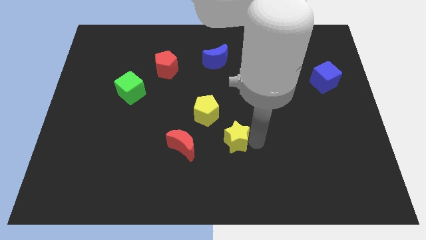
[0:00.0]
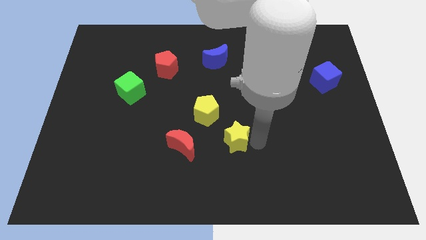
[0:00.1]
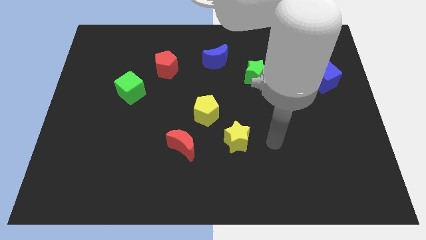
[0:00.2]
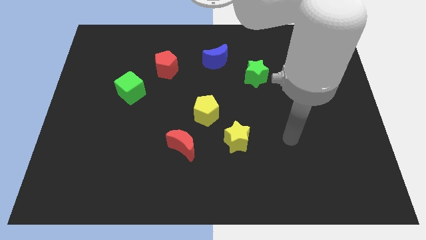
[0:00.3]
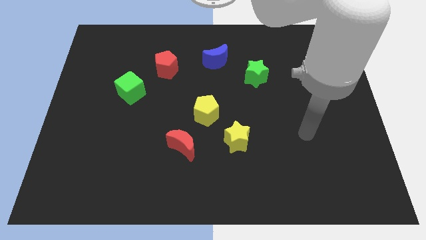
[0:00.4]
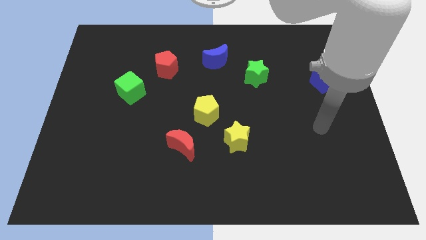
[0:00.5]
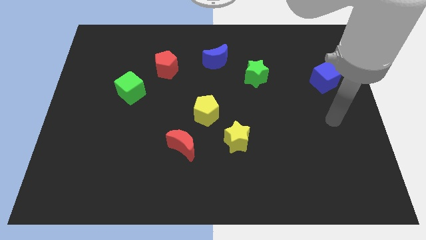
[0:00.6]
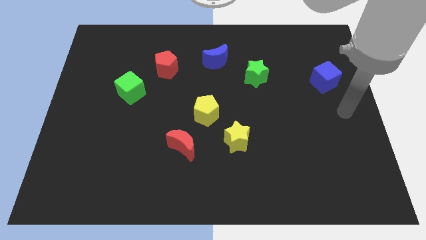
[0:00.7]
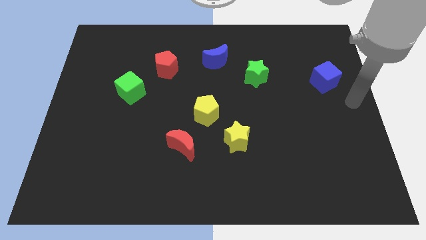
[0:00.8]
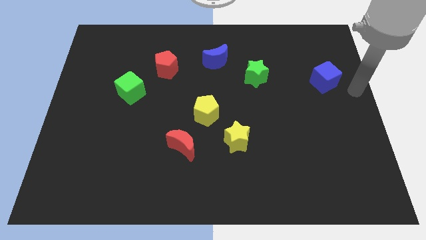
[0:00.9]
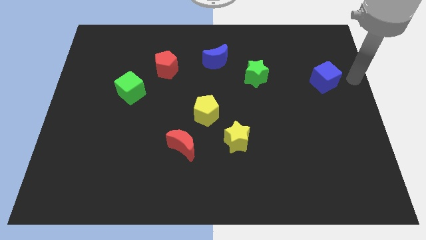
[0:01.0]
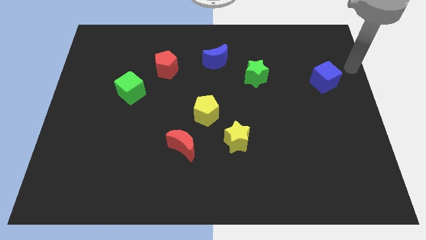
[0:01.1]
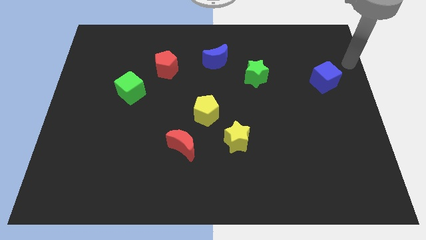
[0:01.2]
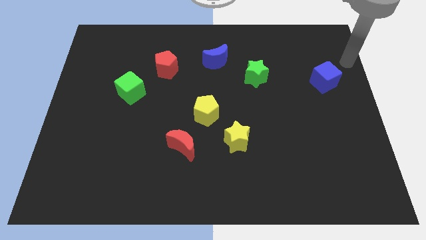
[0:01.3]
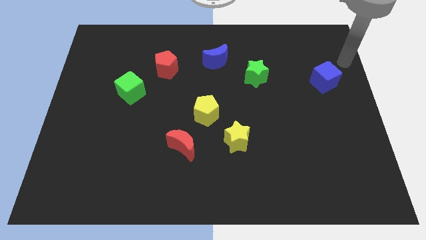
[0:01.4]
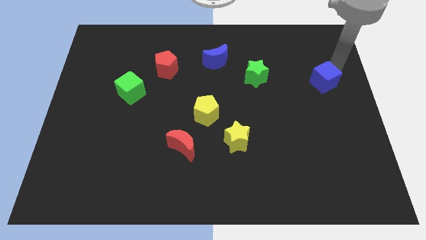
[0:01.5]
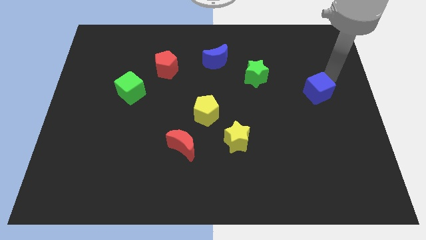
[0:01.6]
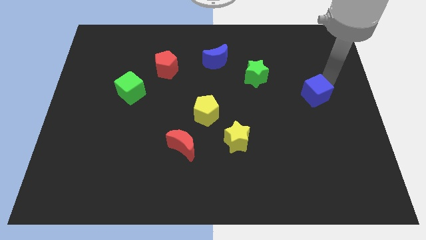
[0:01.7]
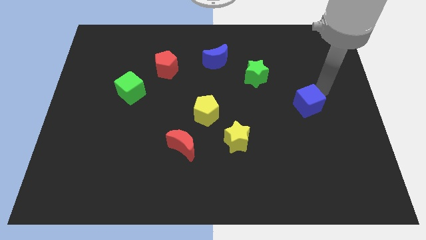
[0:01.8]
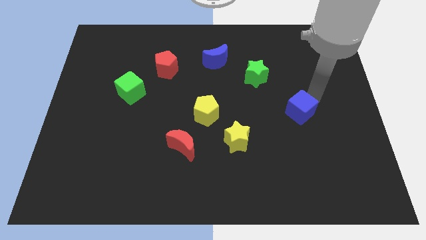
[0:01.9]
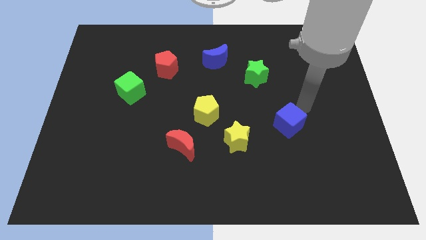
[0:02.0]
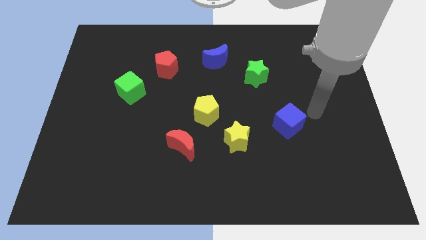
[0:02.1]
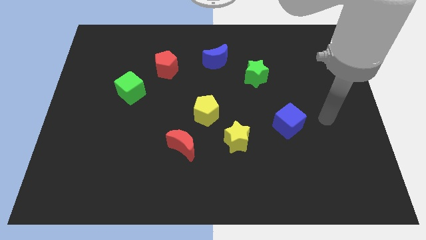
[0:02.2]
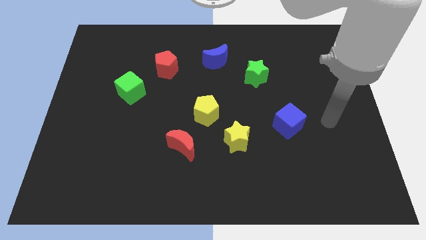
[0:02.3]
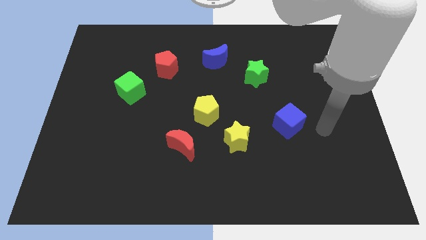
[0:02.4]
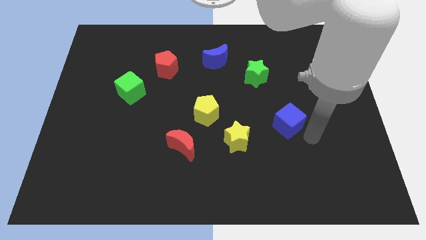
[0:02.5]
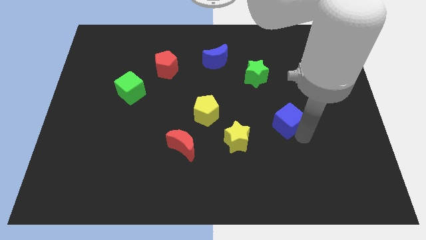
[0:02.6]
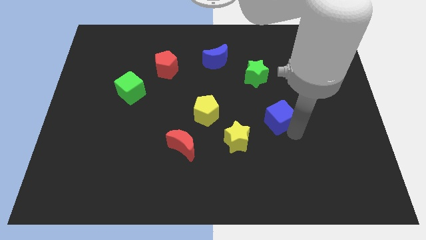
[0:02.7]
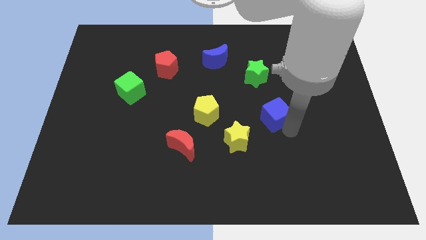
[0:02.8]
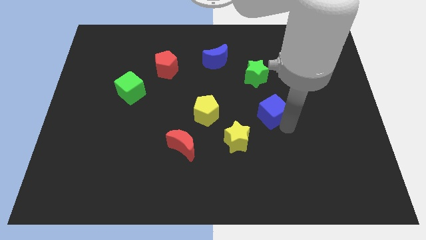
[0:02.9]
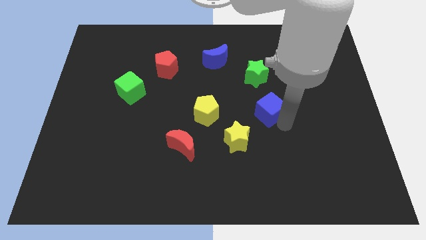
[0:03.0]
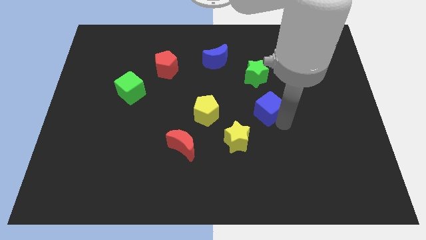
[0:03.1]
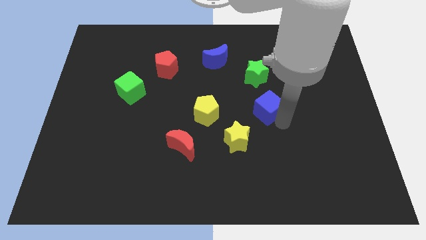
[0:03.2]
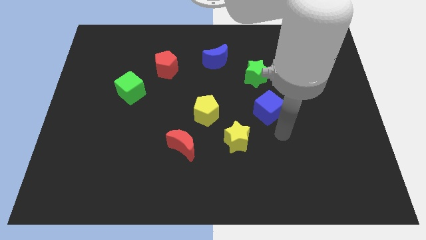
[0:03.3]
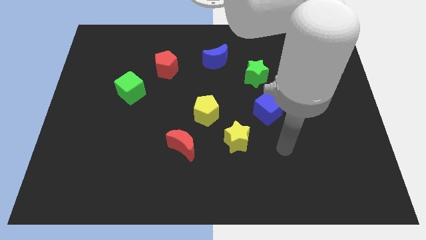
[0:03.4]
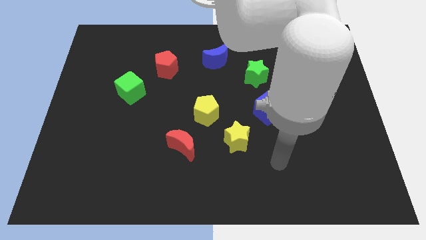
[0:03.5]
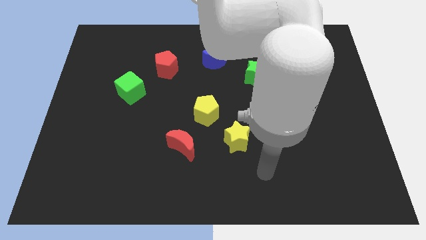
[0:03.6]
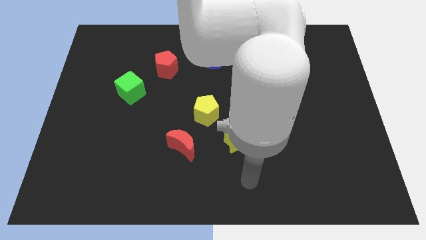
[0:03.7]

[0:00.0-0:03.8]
push the blue cube to the right of the yellow pentagon

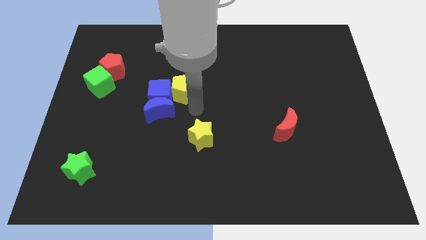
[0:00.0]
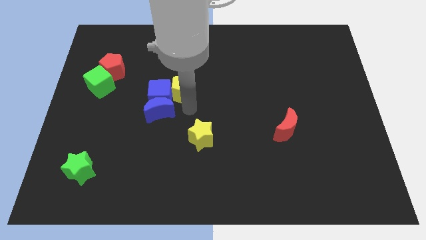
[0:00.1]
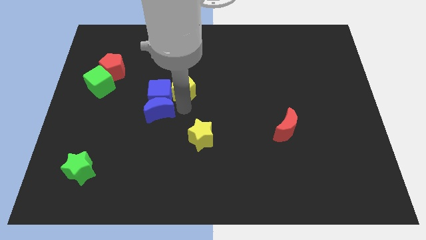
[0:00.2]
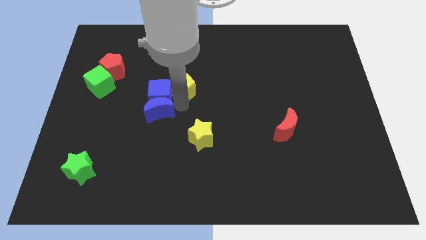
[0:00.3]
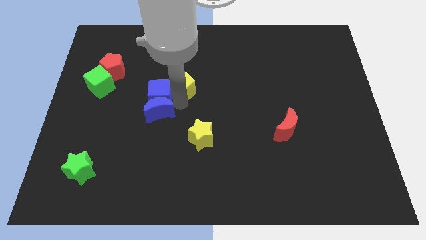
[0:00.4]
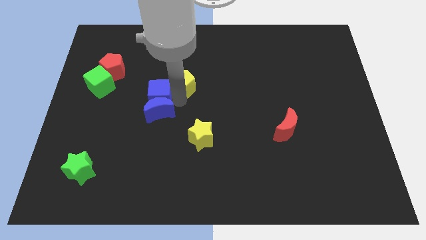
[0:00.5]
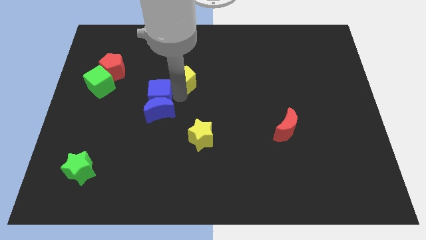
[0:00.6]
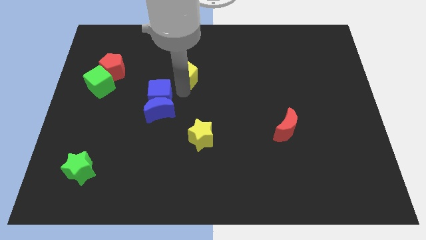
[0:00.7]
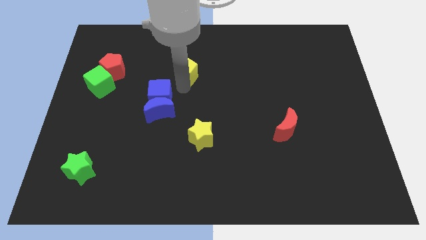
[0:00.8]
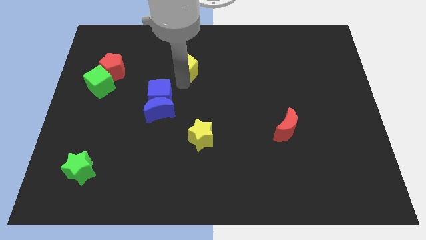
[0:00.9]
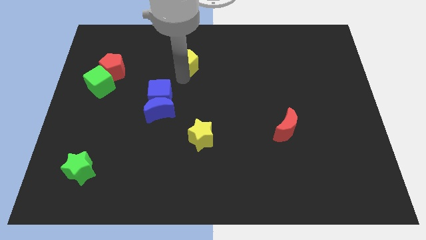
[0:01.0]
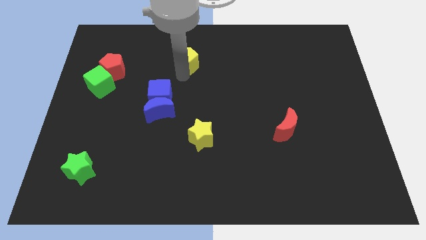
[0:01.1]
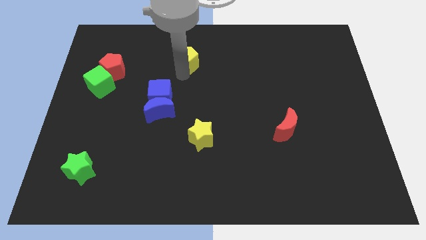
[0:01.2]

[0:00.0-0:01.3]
separate the yellow pentagon from the blue cube

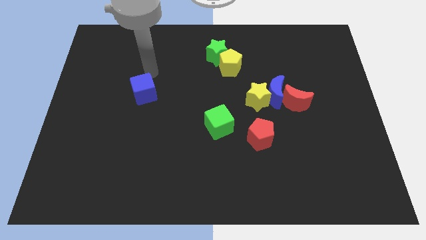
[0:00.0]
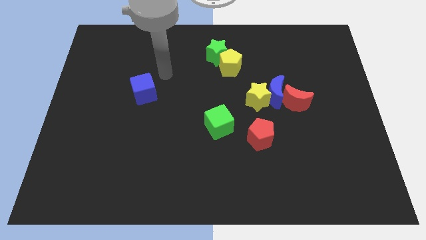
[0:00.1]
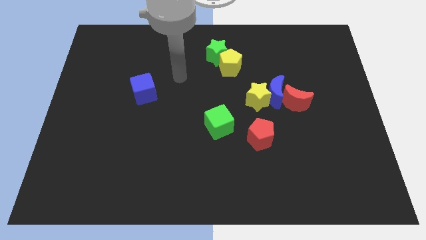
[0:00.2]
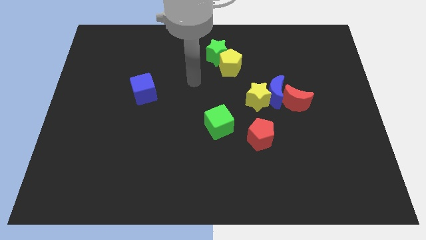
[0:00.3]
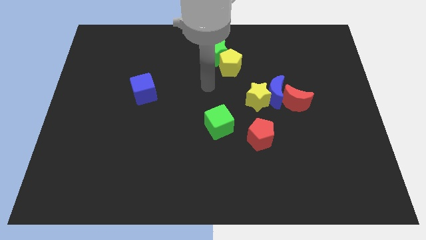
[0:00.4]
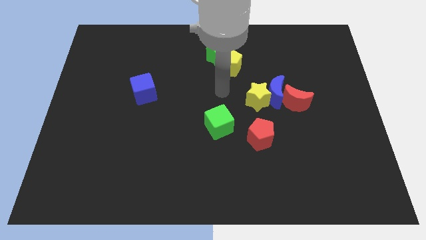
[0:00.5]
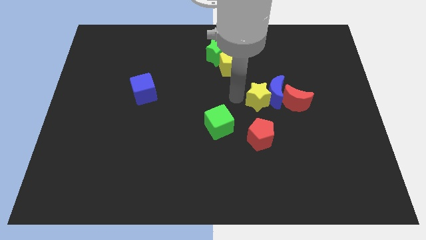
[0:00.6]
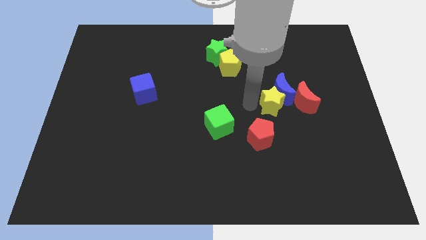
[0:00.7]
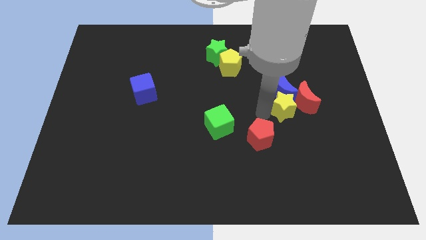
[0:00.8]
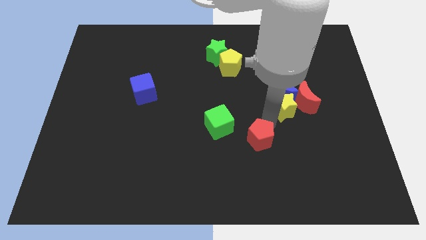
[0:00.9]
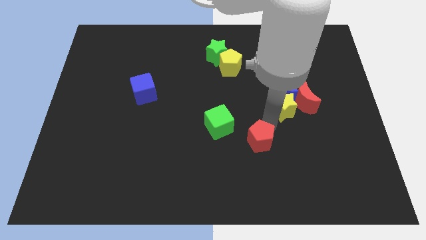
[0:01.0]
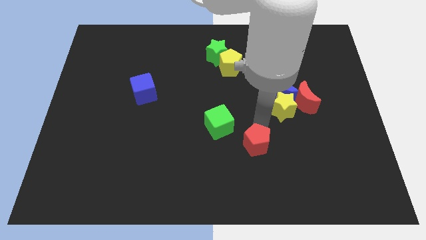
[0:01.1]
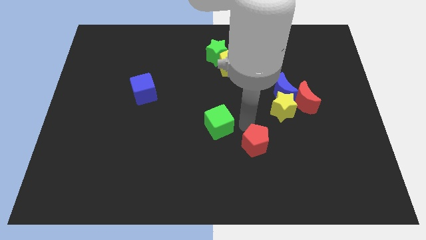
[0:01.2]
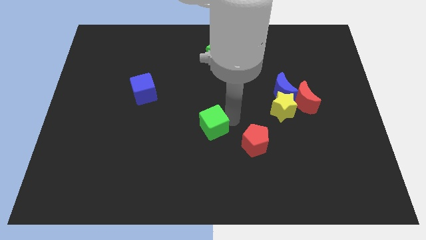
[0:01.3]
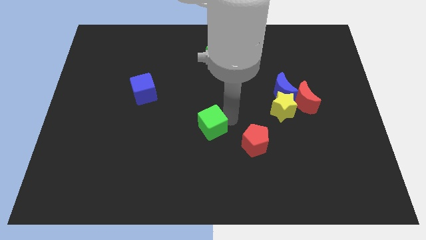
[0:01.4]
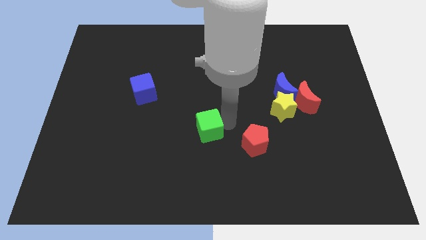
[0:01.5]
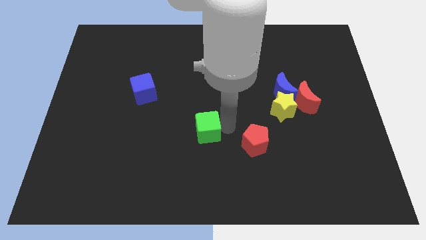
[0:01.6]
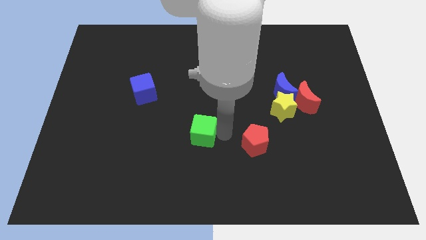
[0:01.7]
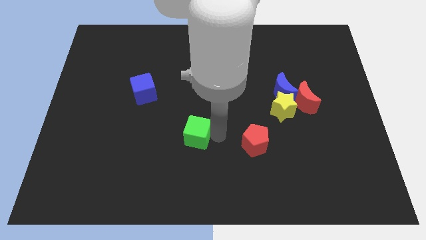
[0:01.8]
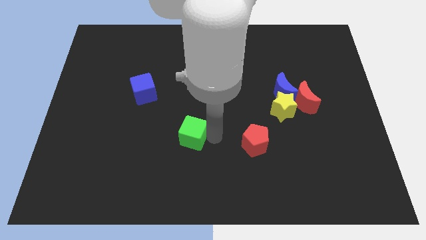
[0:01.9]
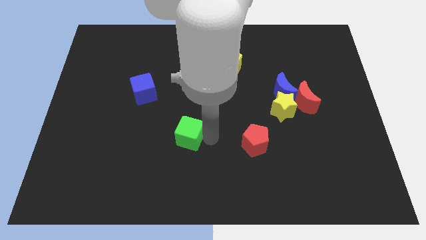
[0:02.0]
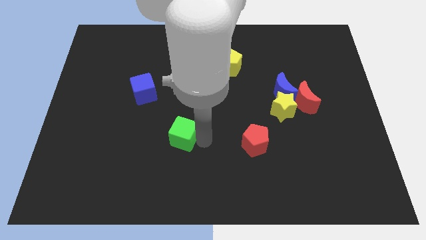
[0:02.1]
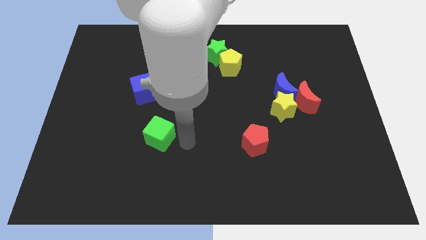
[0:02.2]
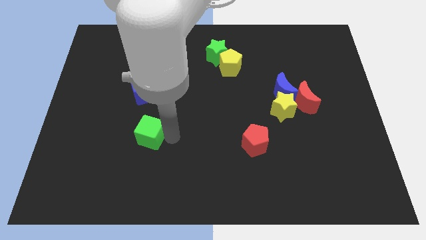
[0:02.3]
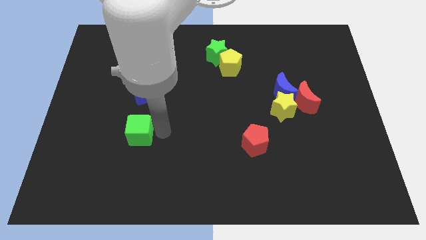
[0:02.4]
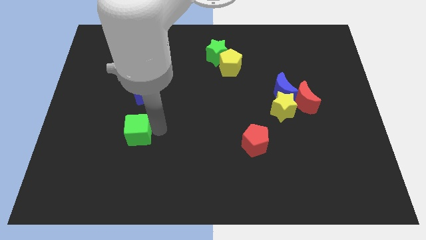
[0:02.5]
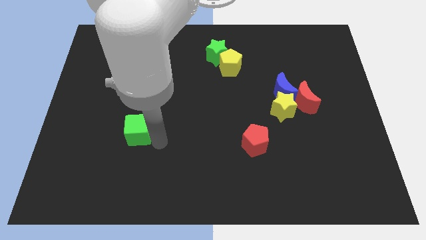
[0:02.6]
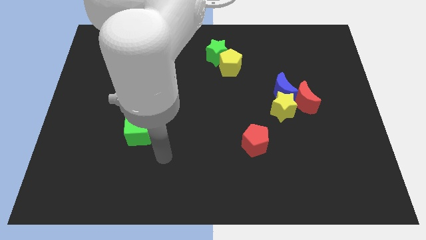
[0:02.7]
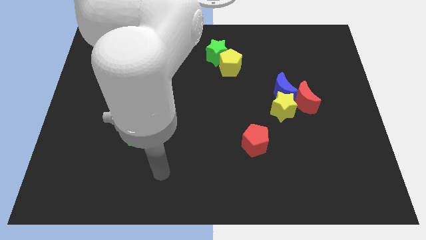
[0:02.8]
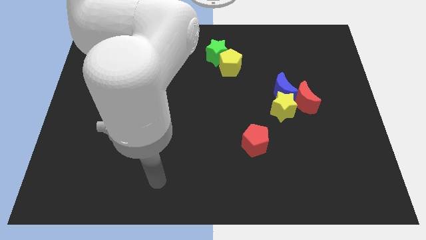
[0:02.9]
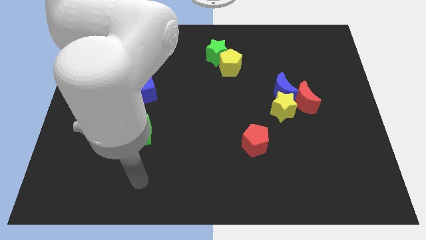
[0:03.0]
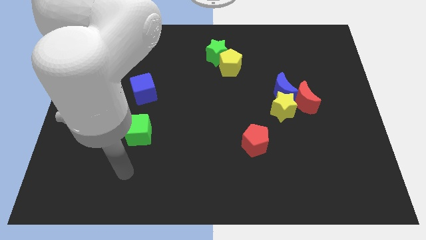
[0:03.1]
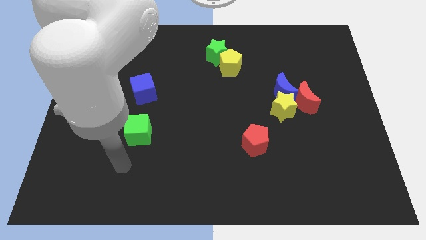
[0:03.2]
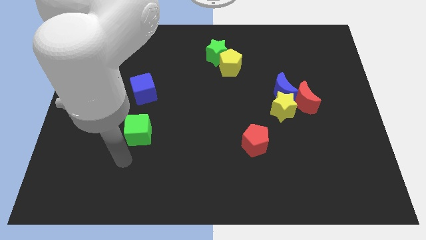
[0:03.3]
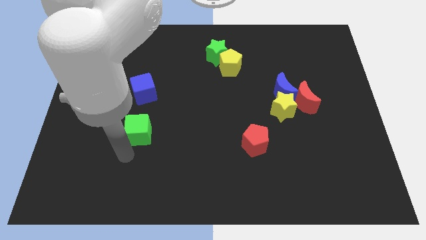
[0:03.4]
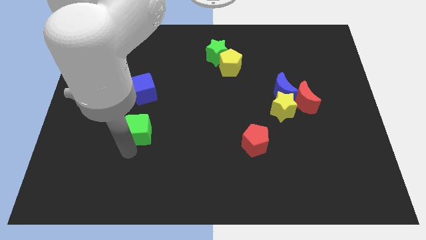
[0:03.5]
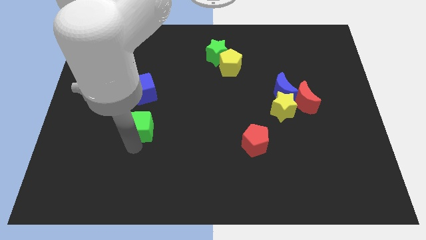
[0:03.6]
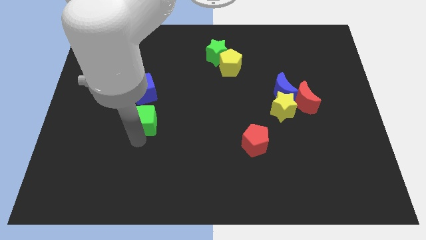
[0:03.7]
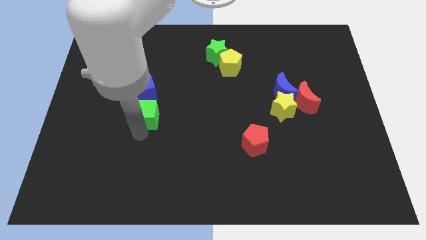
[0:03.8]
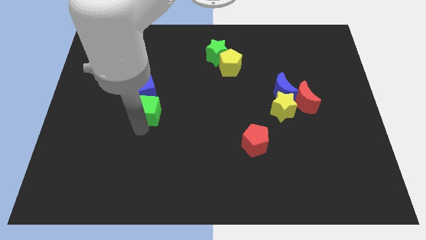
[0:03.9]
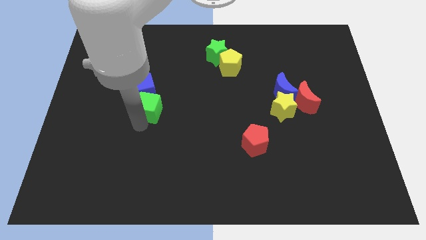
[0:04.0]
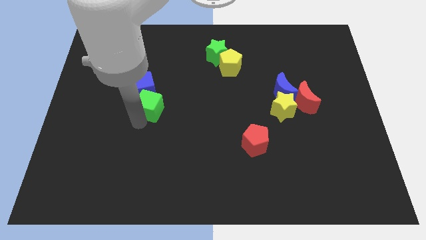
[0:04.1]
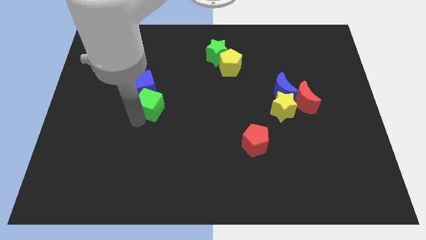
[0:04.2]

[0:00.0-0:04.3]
push the green cube into the bottom side of the blue cube
